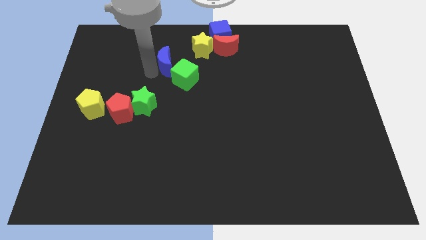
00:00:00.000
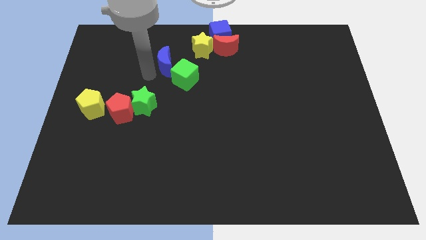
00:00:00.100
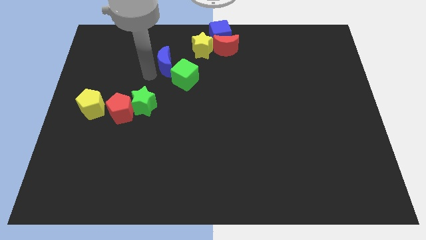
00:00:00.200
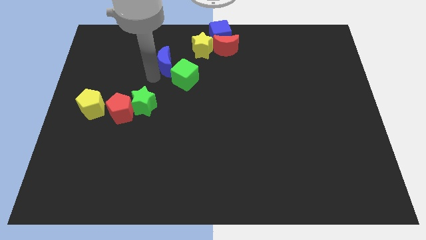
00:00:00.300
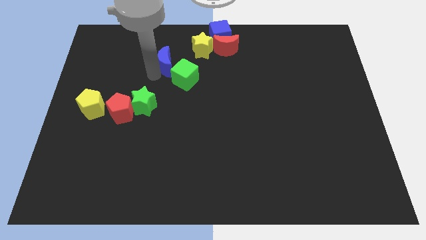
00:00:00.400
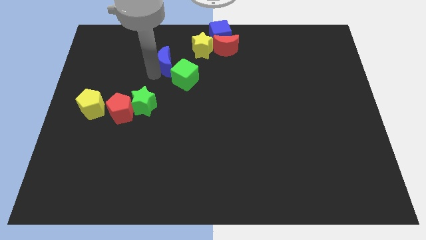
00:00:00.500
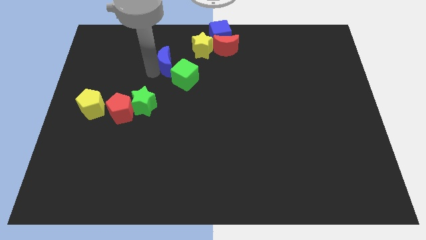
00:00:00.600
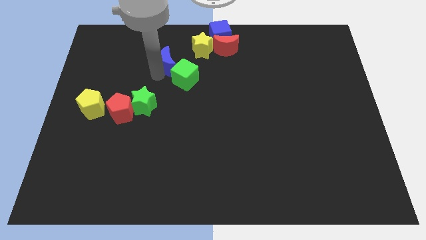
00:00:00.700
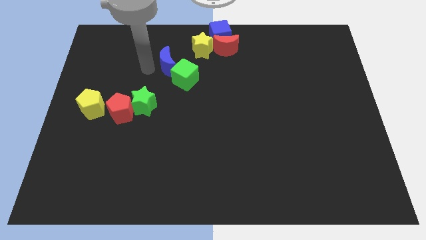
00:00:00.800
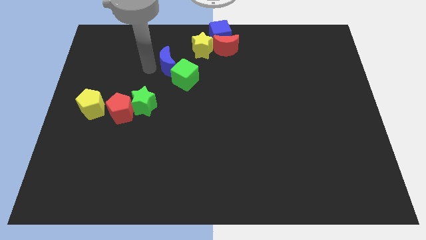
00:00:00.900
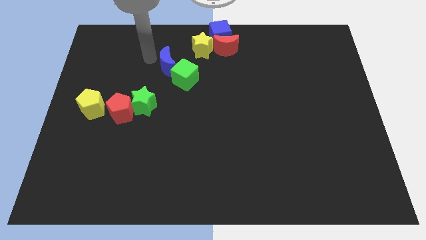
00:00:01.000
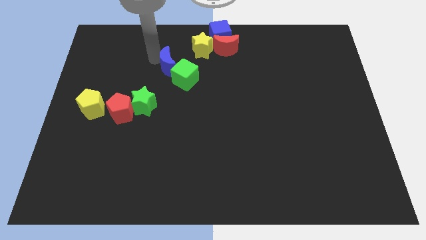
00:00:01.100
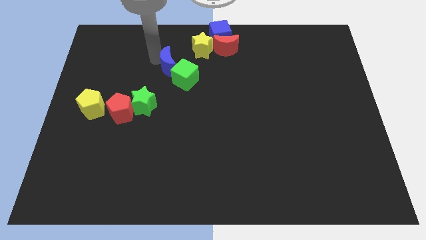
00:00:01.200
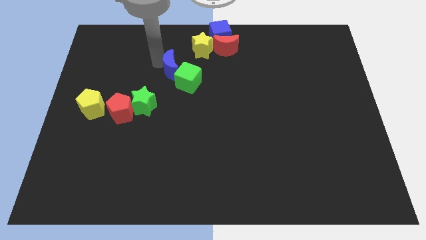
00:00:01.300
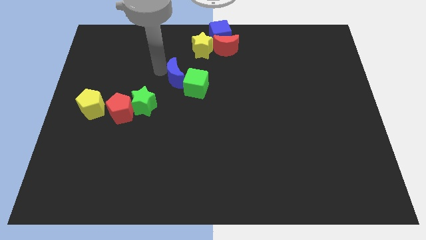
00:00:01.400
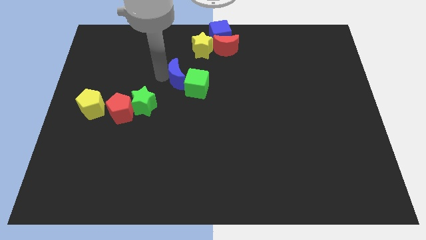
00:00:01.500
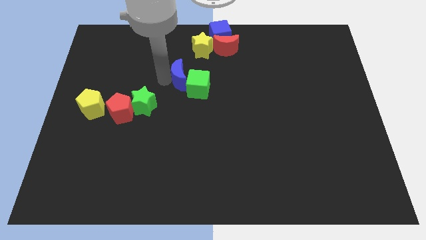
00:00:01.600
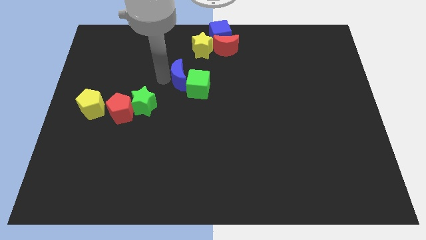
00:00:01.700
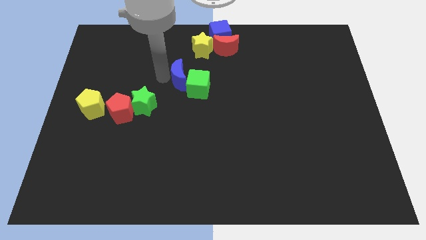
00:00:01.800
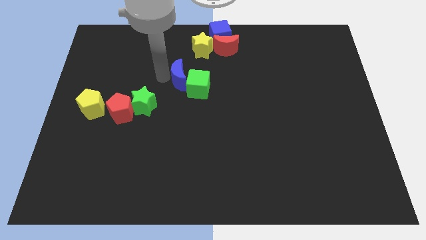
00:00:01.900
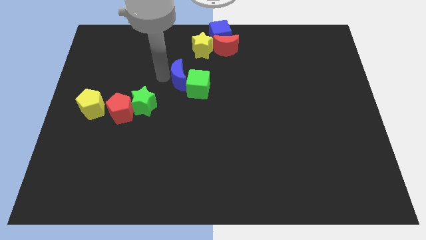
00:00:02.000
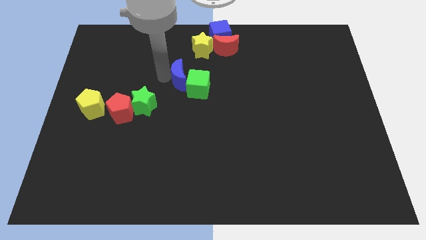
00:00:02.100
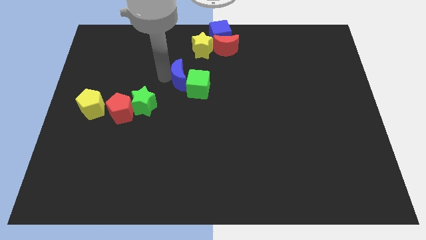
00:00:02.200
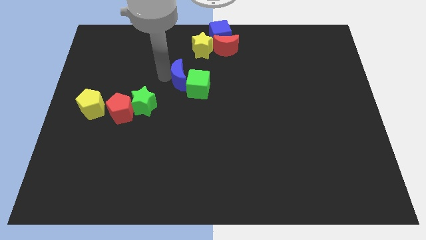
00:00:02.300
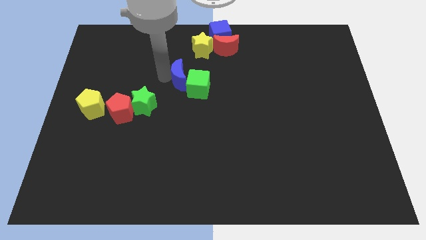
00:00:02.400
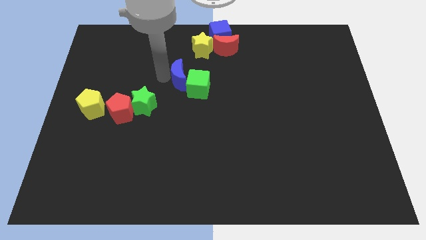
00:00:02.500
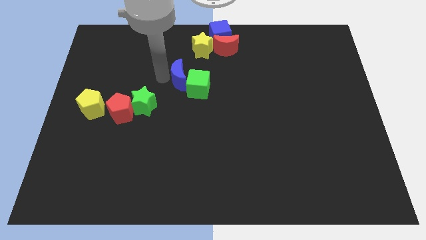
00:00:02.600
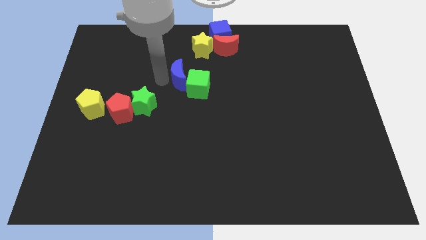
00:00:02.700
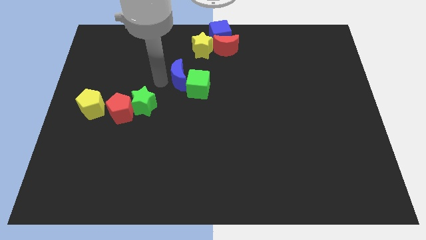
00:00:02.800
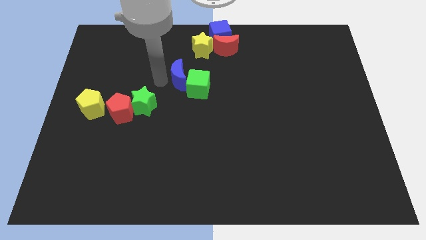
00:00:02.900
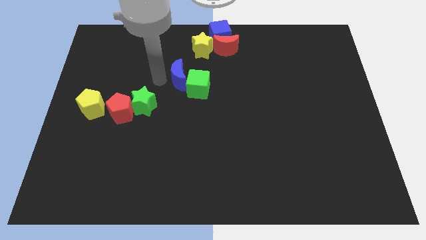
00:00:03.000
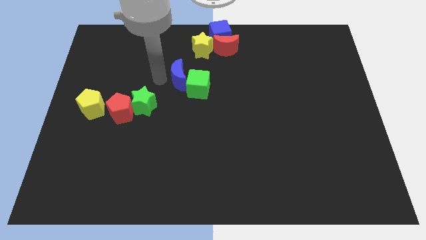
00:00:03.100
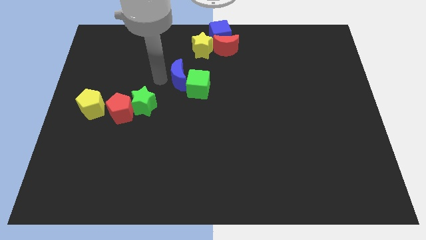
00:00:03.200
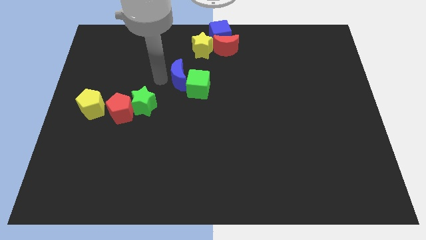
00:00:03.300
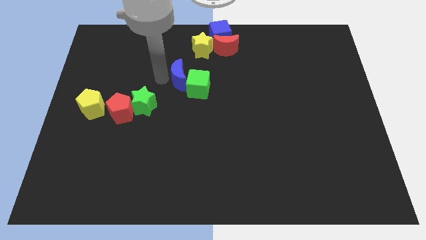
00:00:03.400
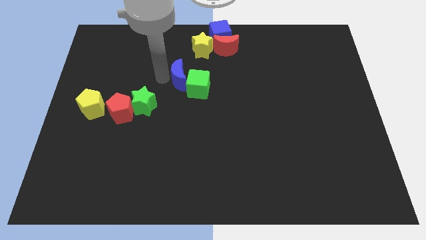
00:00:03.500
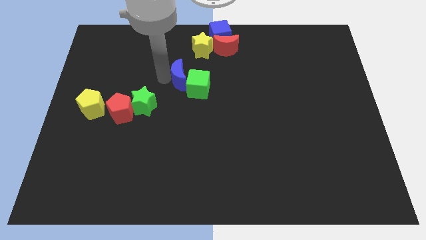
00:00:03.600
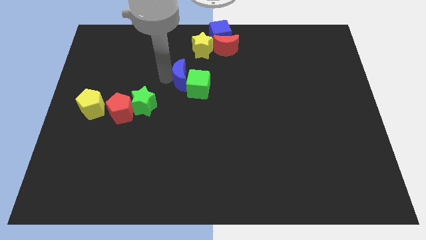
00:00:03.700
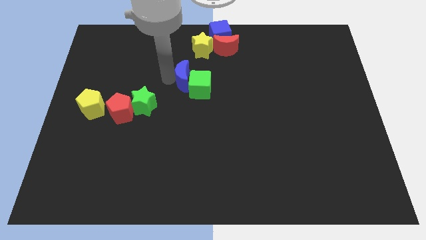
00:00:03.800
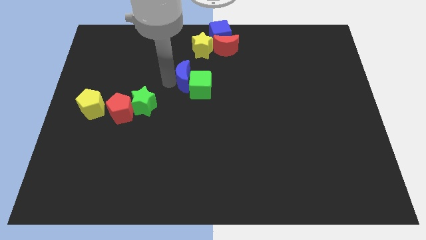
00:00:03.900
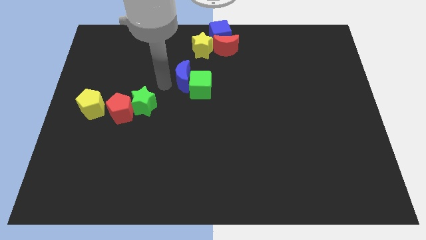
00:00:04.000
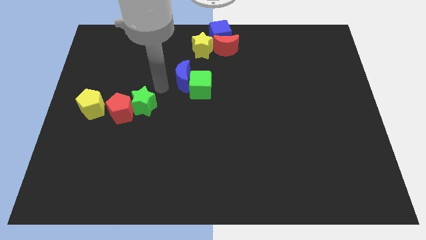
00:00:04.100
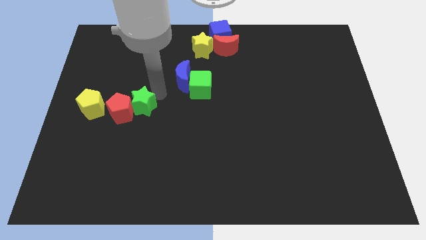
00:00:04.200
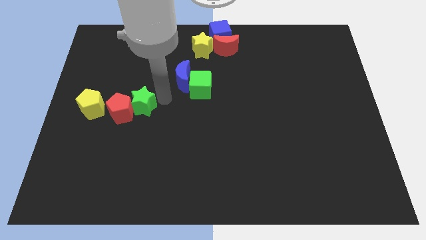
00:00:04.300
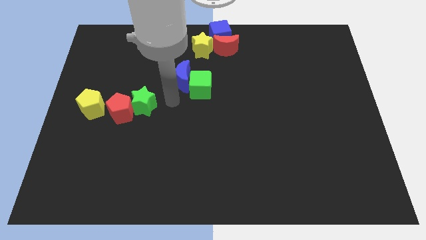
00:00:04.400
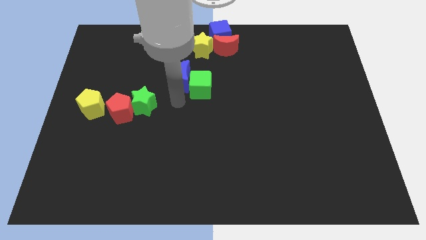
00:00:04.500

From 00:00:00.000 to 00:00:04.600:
place blue crescent close to green cube

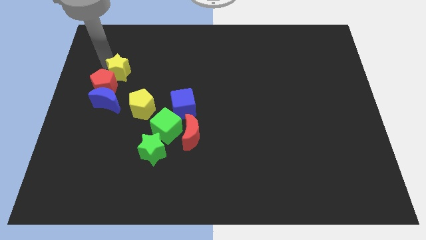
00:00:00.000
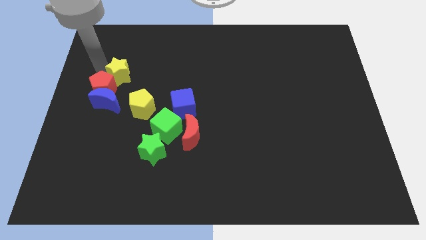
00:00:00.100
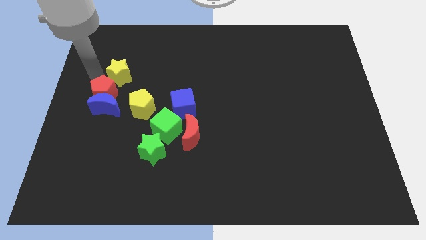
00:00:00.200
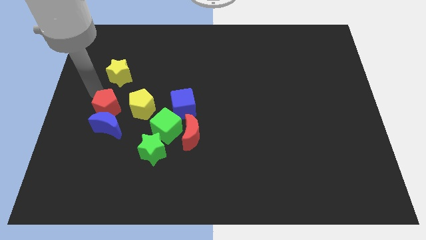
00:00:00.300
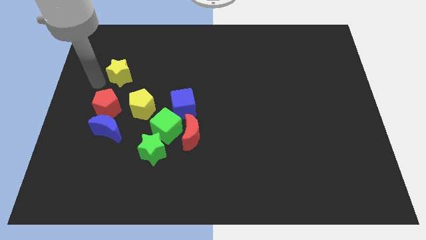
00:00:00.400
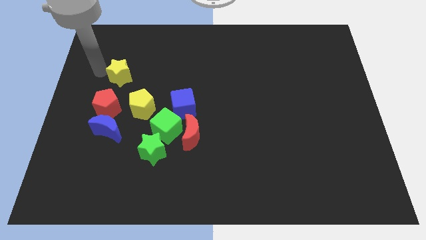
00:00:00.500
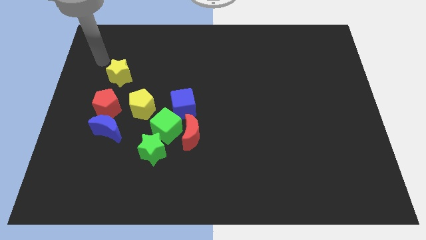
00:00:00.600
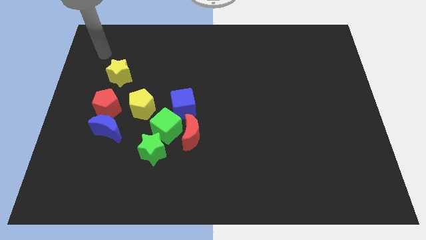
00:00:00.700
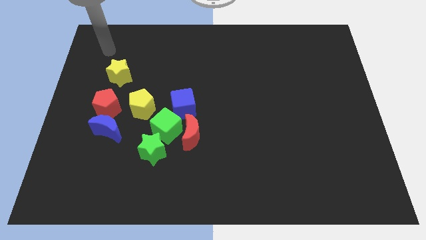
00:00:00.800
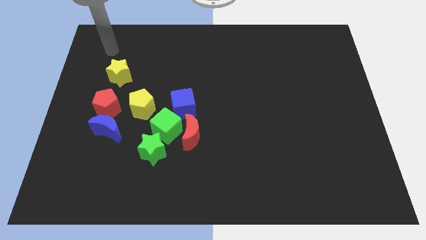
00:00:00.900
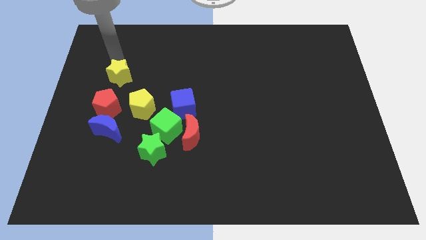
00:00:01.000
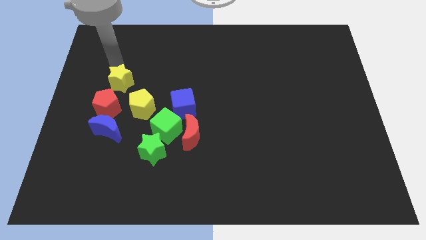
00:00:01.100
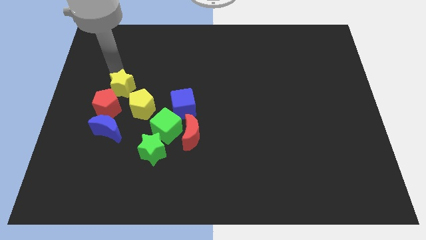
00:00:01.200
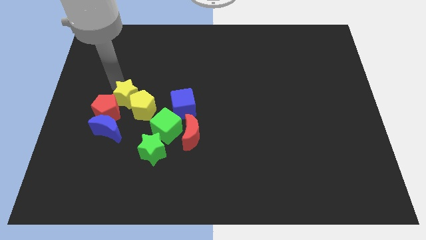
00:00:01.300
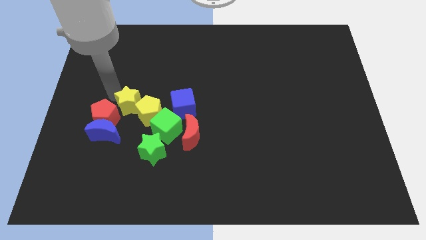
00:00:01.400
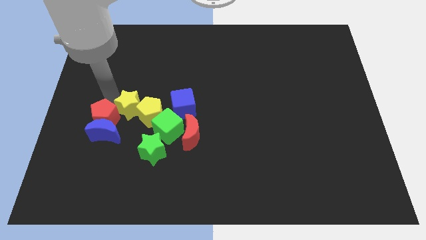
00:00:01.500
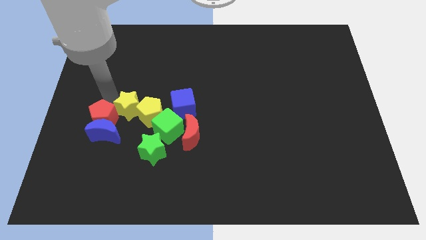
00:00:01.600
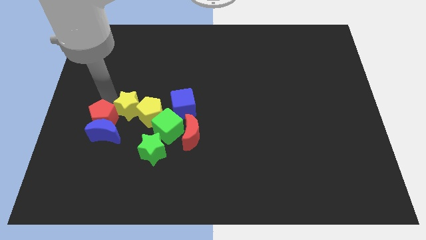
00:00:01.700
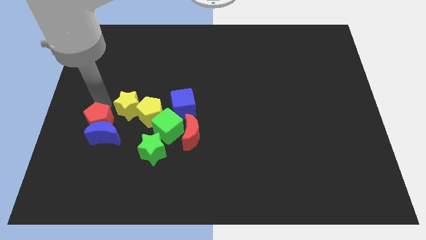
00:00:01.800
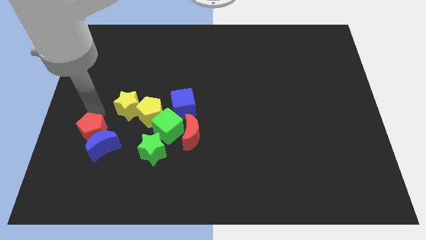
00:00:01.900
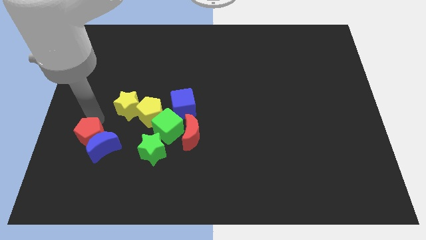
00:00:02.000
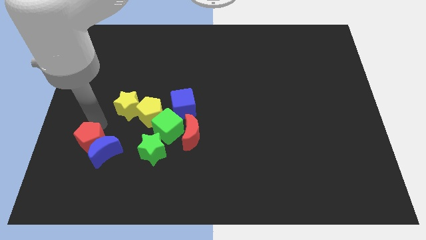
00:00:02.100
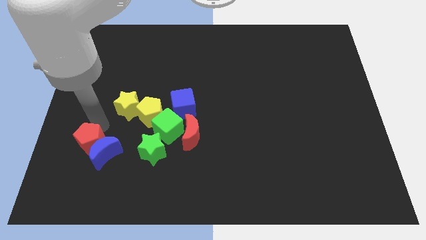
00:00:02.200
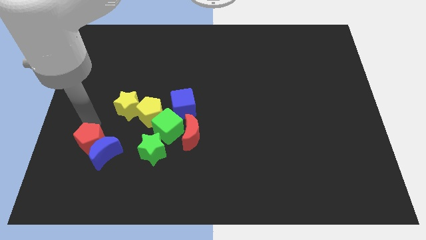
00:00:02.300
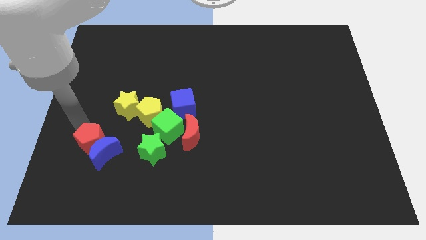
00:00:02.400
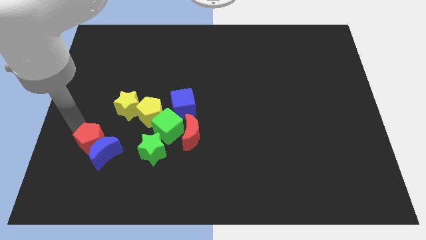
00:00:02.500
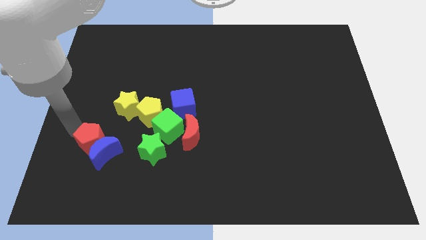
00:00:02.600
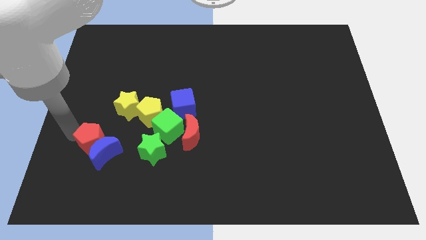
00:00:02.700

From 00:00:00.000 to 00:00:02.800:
push yellow star into the yellow pentagon

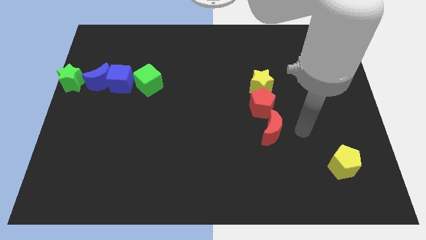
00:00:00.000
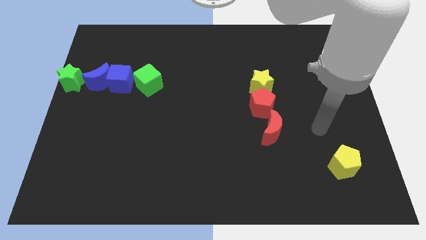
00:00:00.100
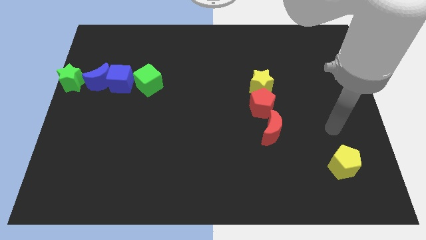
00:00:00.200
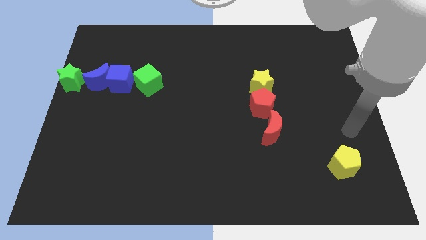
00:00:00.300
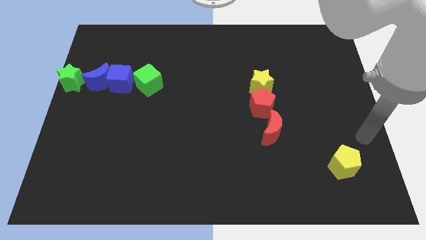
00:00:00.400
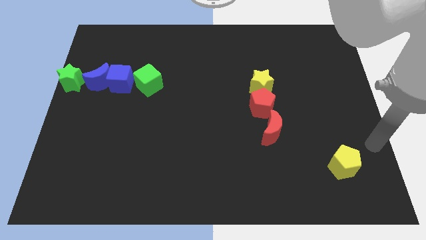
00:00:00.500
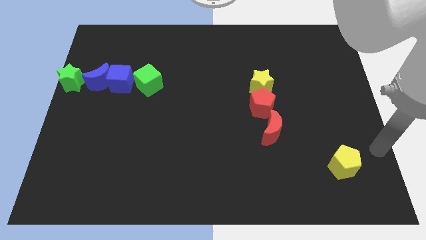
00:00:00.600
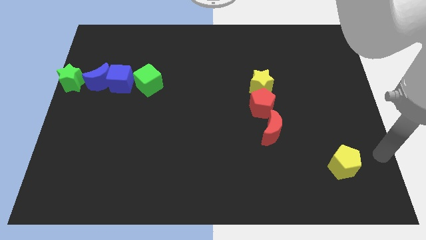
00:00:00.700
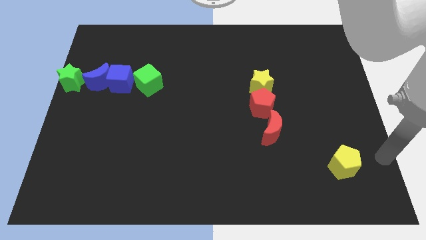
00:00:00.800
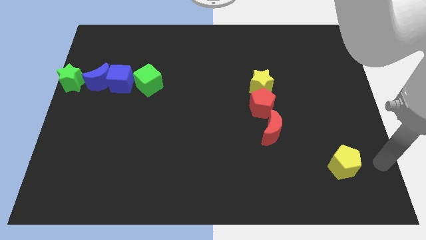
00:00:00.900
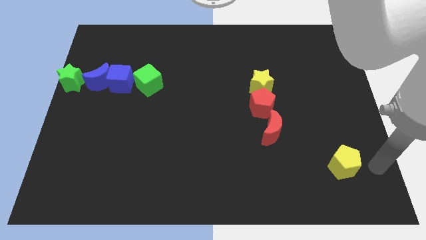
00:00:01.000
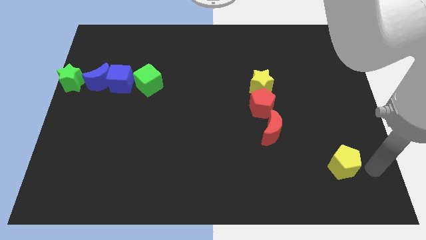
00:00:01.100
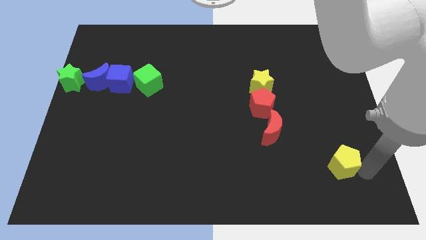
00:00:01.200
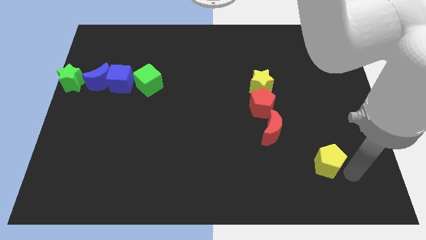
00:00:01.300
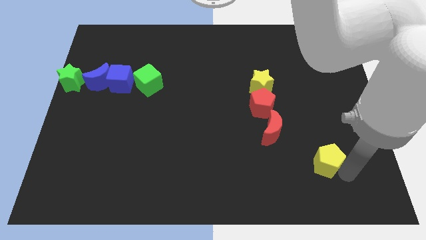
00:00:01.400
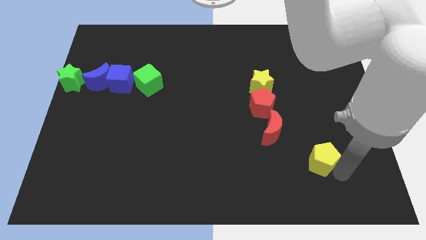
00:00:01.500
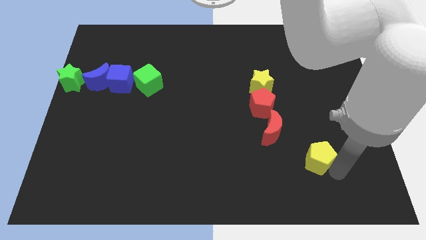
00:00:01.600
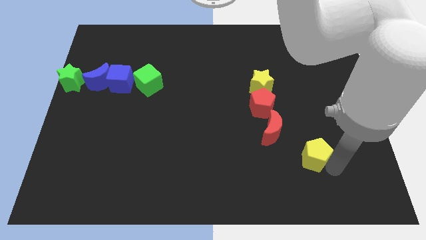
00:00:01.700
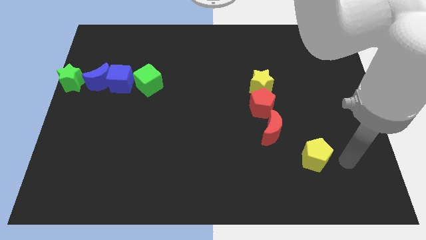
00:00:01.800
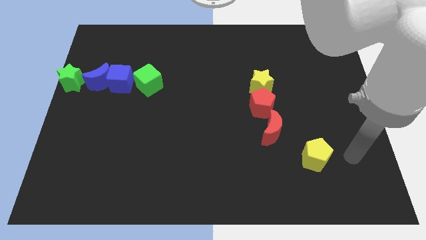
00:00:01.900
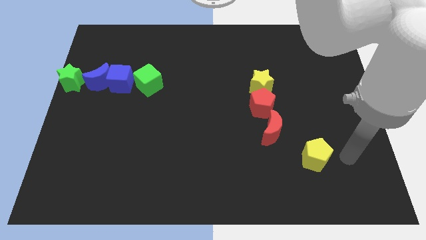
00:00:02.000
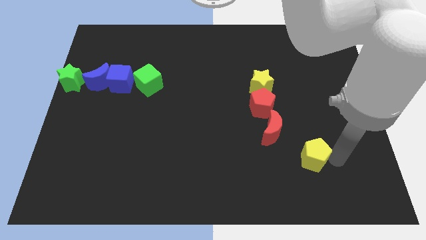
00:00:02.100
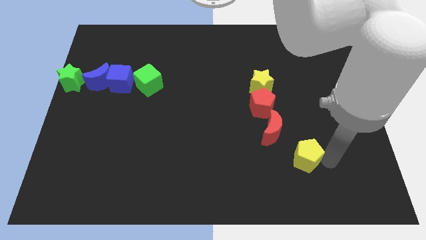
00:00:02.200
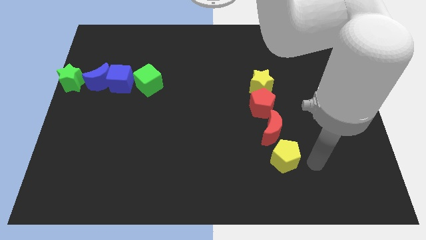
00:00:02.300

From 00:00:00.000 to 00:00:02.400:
move the yellow pentagon towards red crescent
